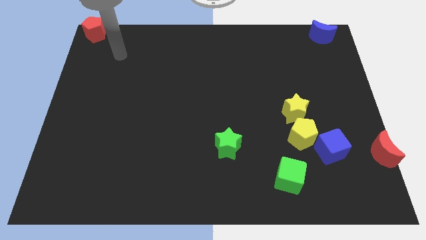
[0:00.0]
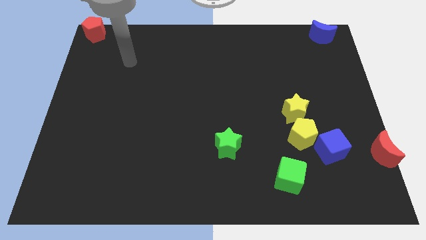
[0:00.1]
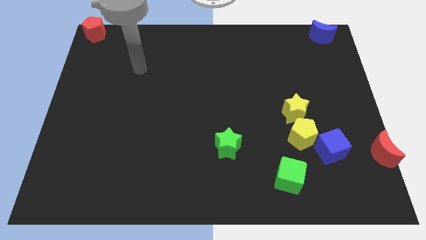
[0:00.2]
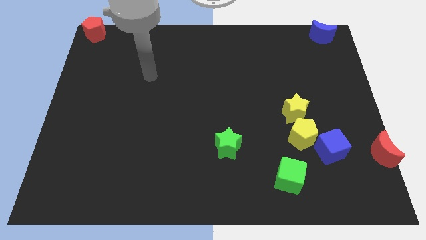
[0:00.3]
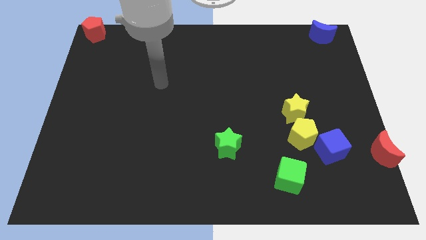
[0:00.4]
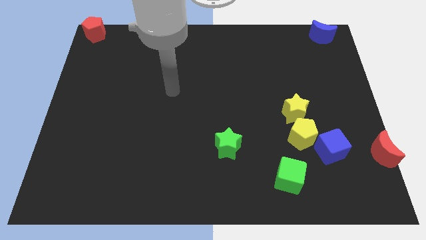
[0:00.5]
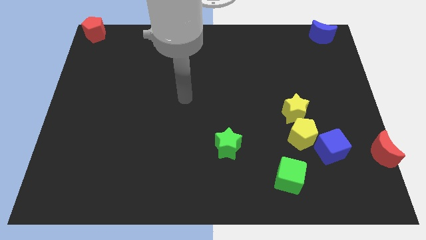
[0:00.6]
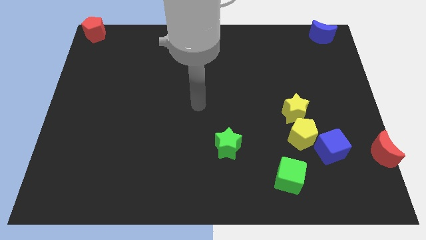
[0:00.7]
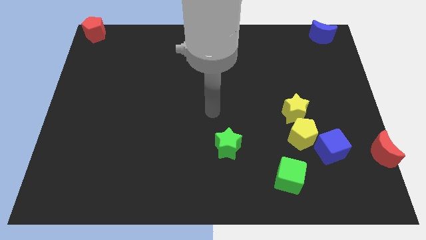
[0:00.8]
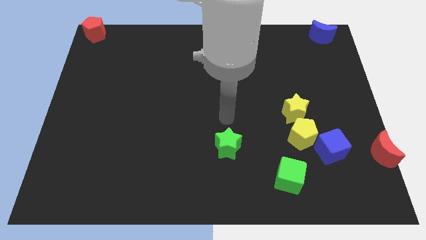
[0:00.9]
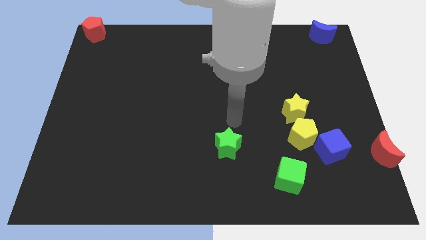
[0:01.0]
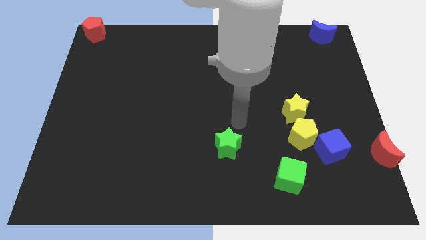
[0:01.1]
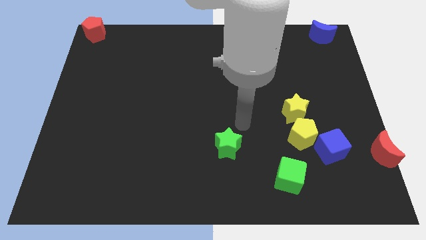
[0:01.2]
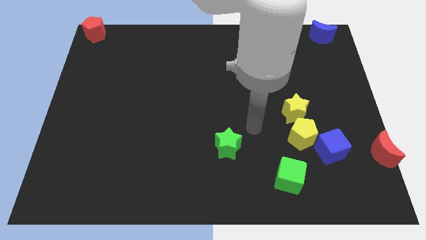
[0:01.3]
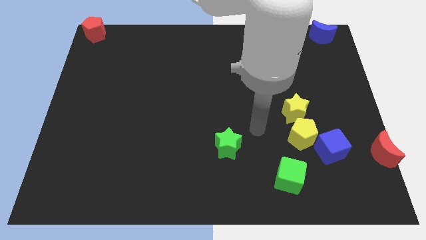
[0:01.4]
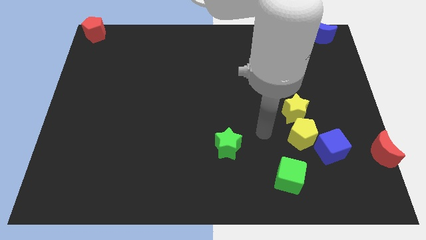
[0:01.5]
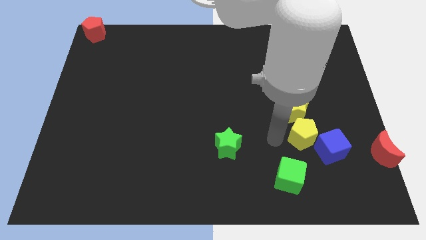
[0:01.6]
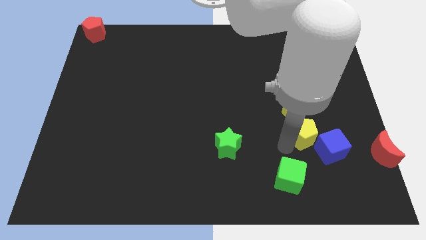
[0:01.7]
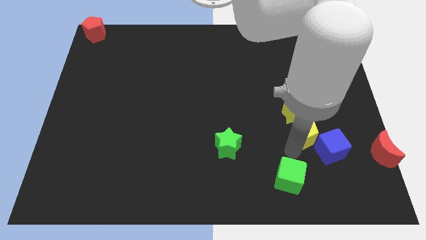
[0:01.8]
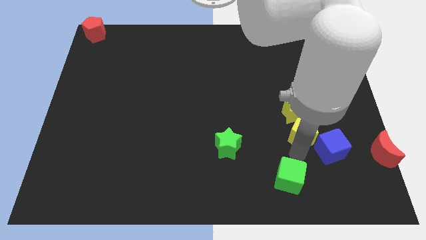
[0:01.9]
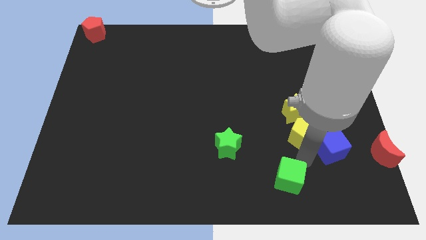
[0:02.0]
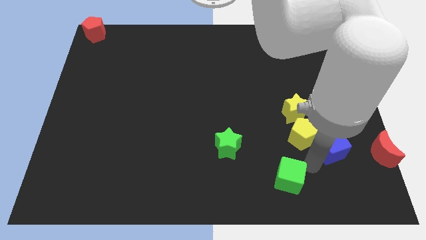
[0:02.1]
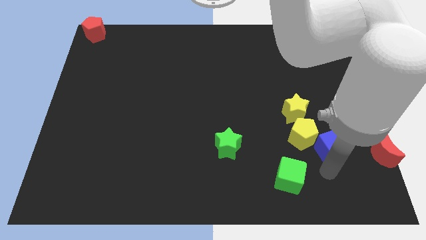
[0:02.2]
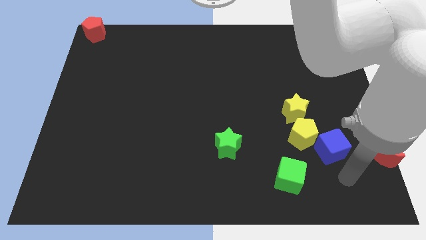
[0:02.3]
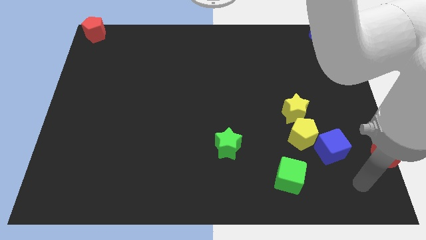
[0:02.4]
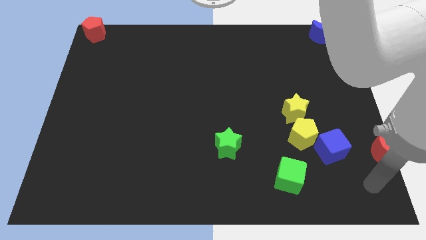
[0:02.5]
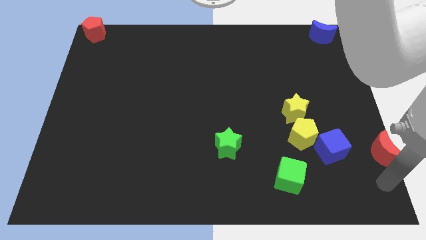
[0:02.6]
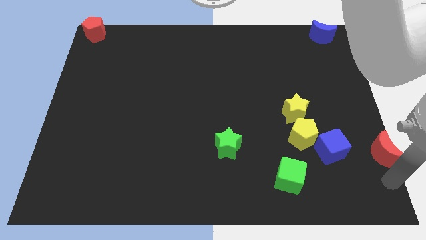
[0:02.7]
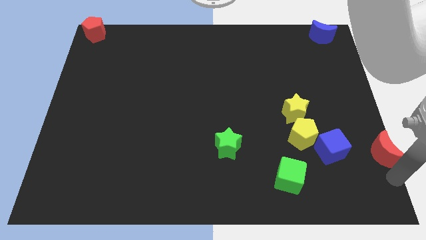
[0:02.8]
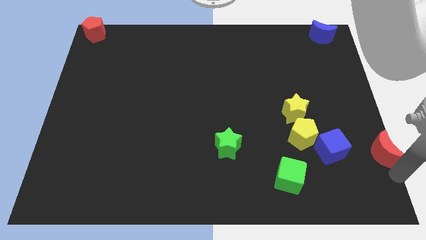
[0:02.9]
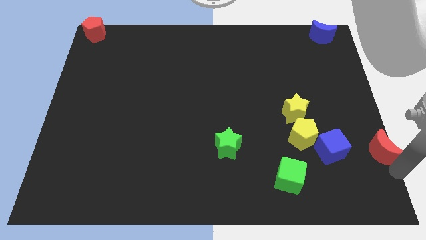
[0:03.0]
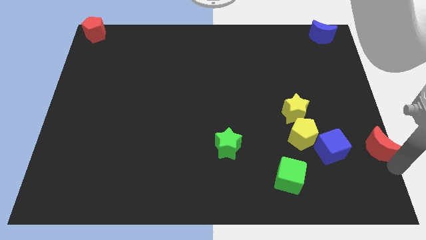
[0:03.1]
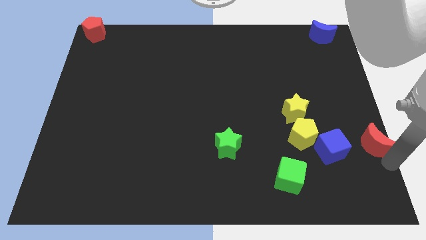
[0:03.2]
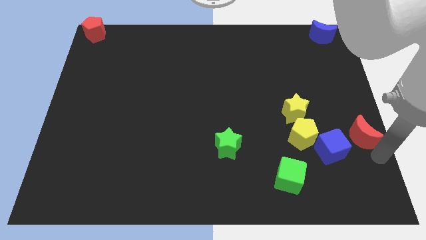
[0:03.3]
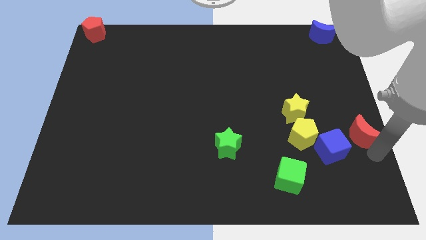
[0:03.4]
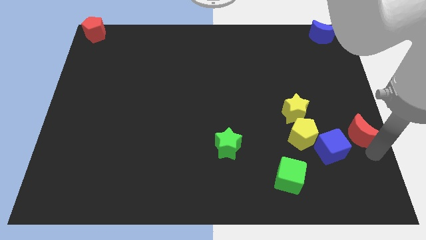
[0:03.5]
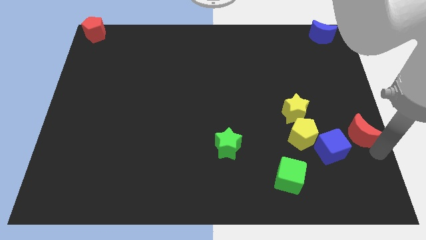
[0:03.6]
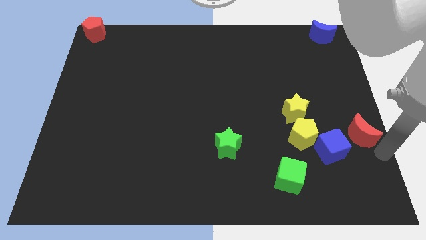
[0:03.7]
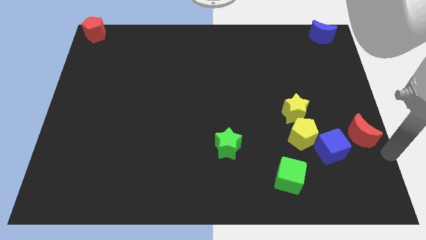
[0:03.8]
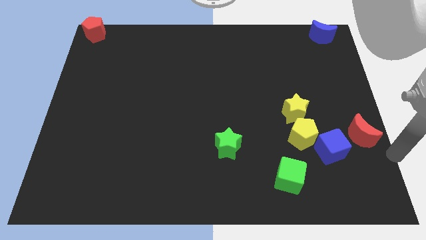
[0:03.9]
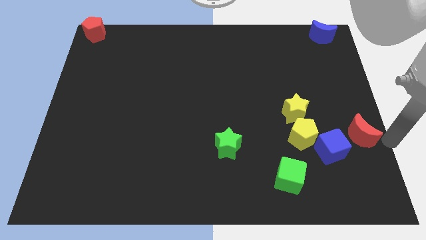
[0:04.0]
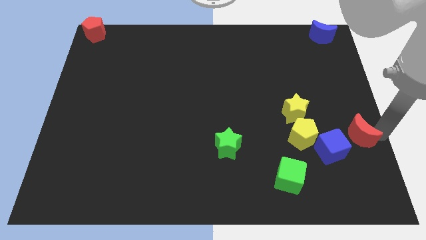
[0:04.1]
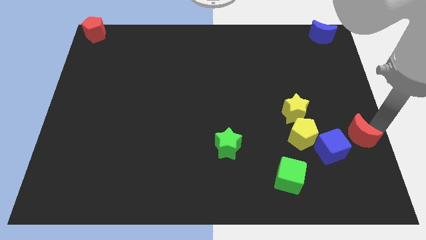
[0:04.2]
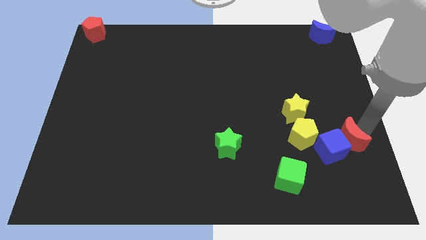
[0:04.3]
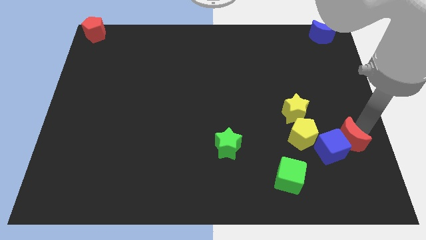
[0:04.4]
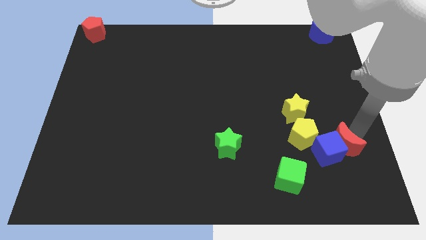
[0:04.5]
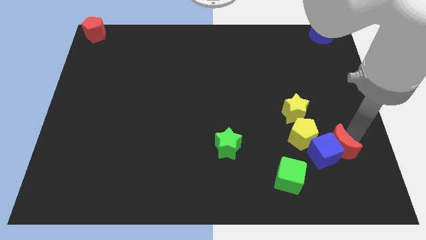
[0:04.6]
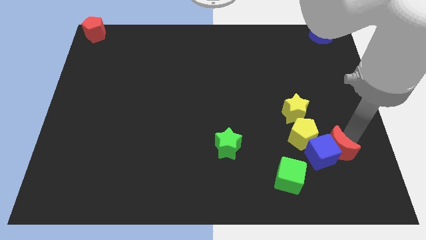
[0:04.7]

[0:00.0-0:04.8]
move the red crescent to the top right side of the blue cube

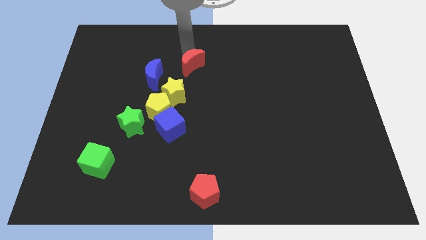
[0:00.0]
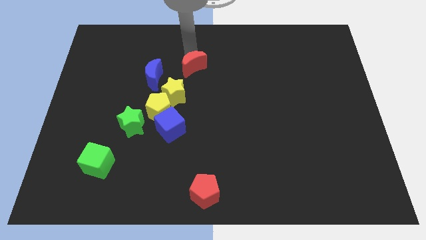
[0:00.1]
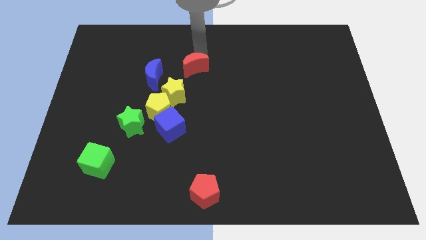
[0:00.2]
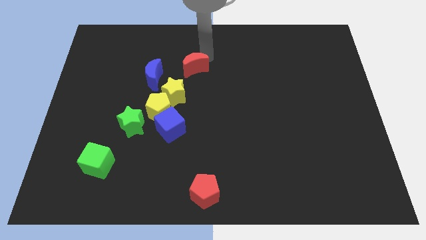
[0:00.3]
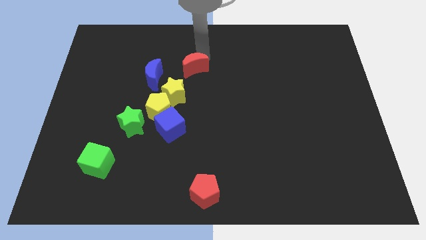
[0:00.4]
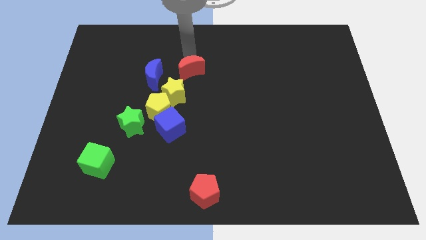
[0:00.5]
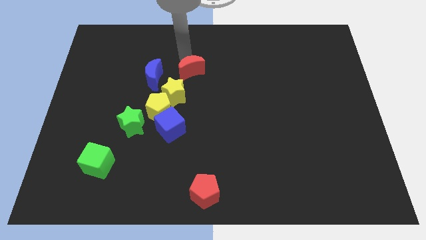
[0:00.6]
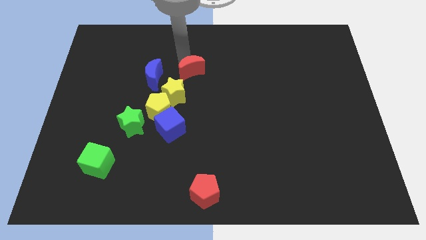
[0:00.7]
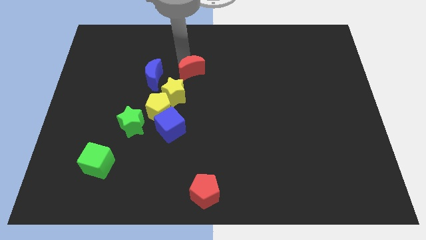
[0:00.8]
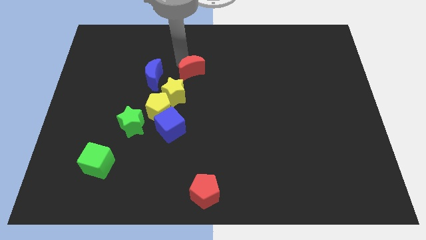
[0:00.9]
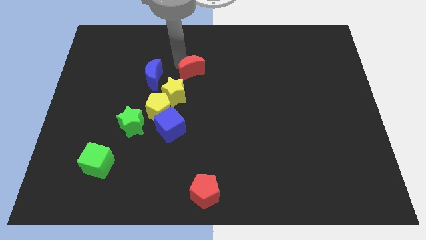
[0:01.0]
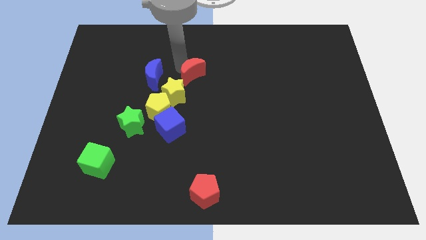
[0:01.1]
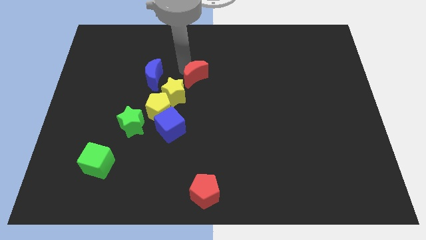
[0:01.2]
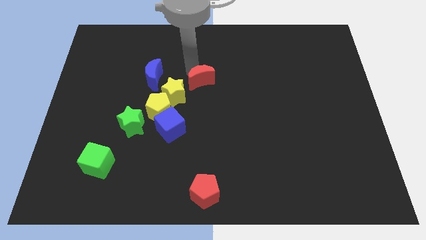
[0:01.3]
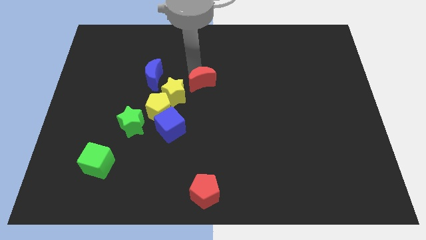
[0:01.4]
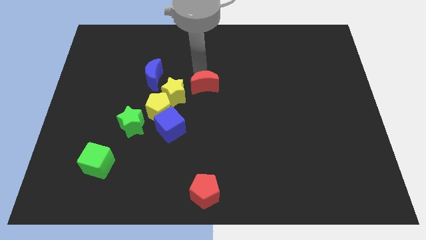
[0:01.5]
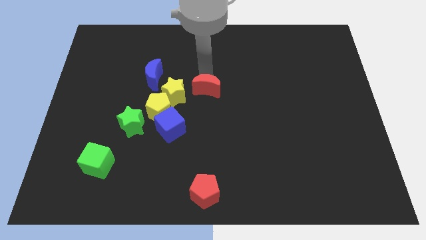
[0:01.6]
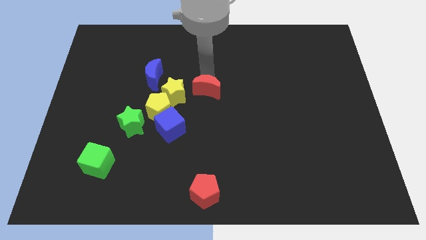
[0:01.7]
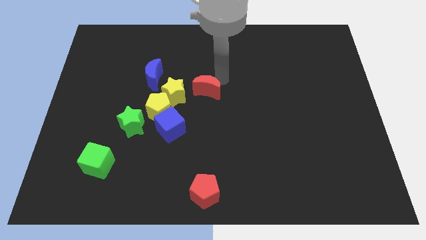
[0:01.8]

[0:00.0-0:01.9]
put the red moon in the center

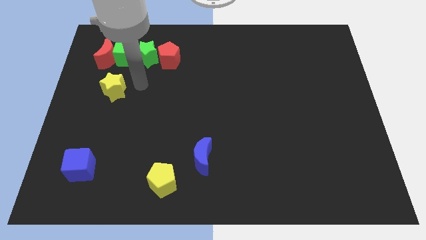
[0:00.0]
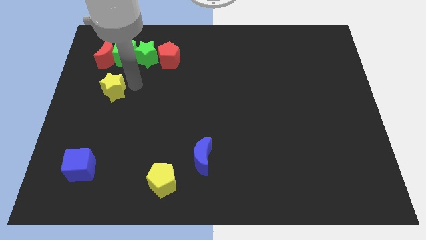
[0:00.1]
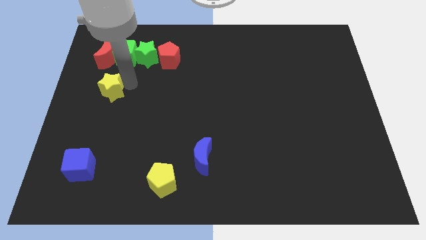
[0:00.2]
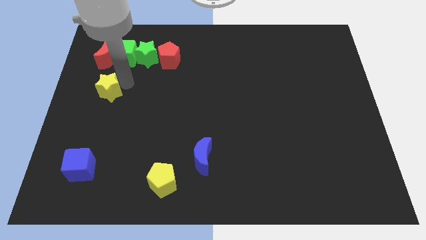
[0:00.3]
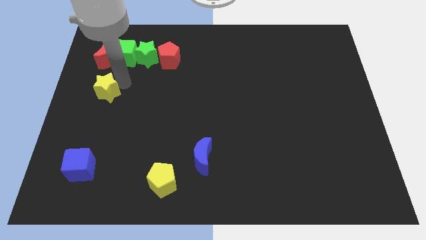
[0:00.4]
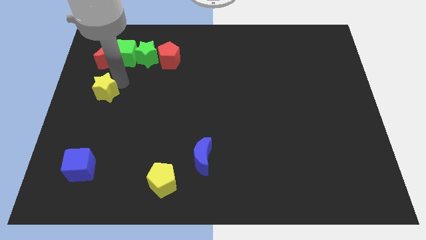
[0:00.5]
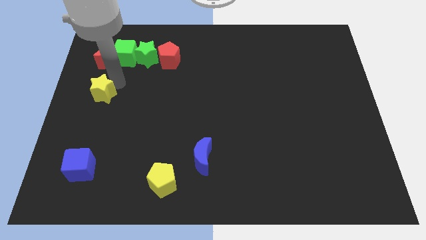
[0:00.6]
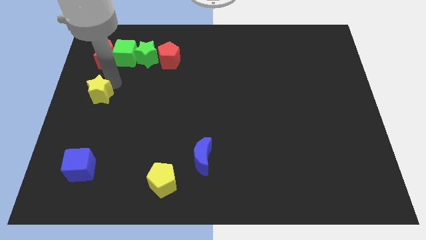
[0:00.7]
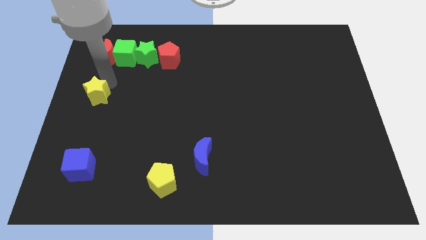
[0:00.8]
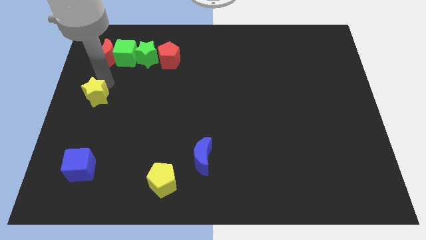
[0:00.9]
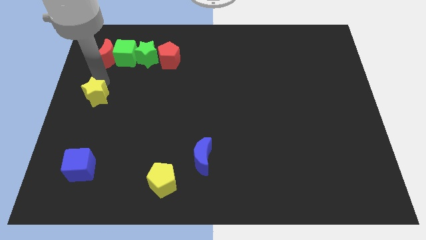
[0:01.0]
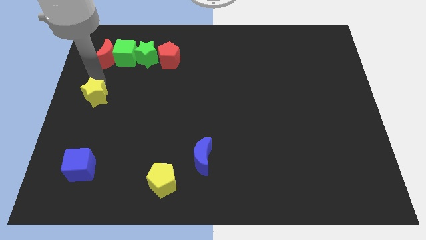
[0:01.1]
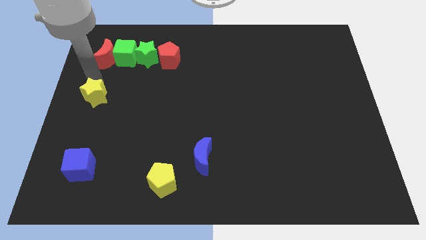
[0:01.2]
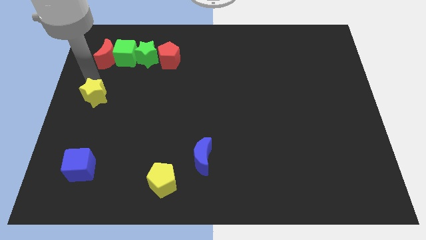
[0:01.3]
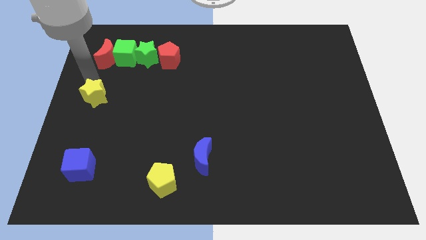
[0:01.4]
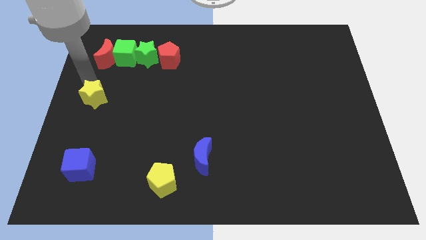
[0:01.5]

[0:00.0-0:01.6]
move the yellow star slightly left side

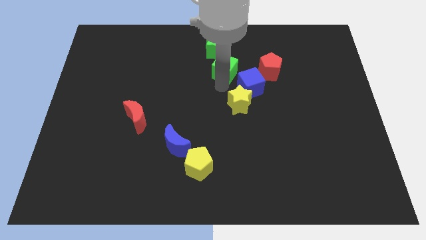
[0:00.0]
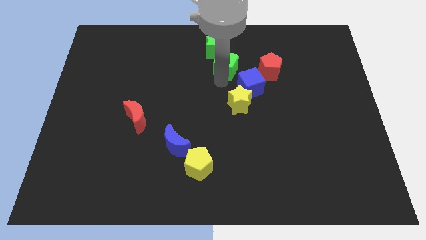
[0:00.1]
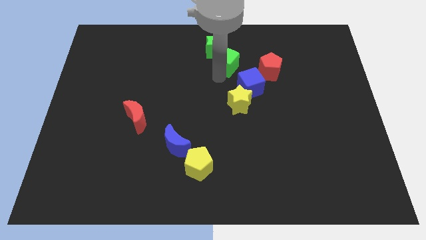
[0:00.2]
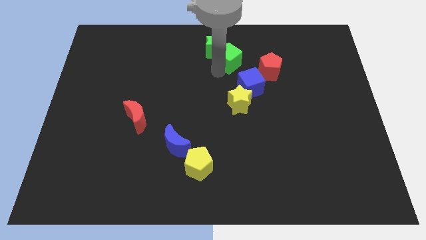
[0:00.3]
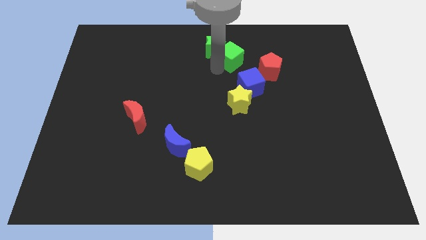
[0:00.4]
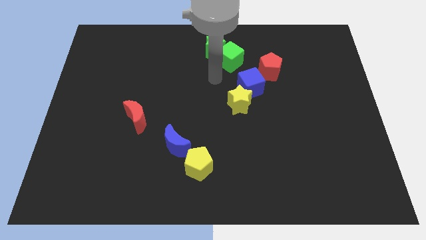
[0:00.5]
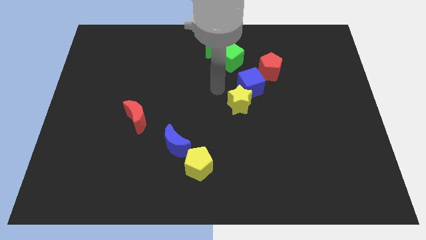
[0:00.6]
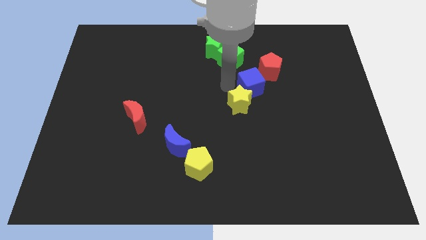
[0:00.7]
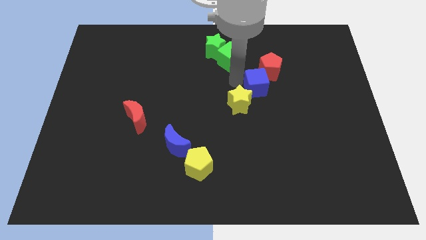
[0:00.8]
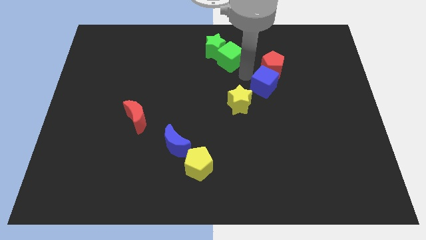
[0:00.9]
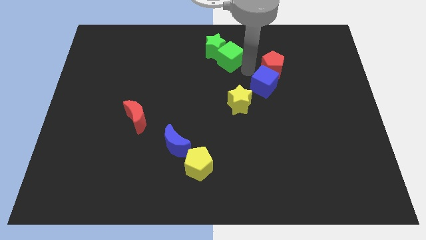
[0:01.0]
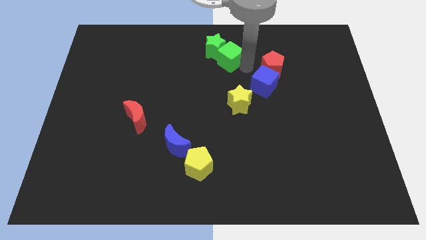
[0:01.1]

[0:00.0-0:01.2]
move the blue cube towards the bottom left of the red pentagon
